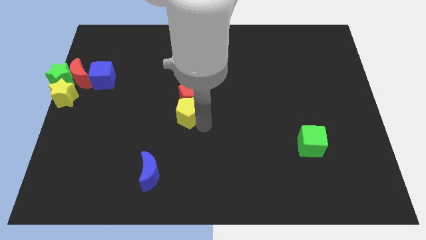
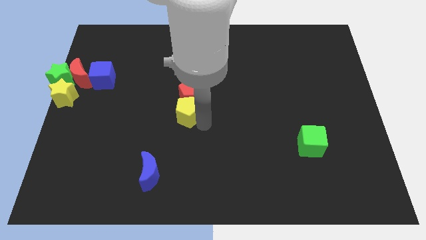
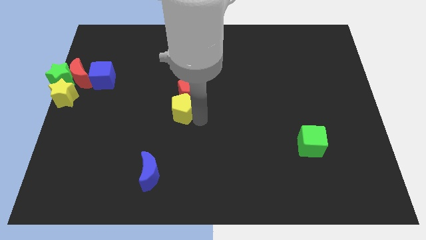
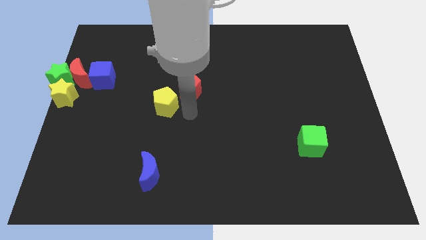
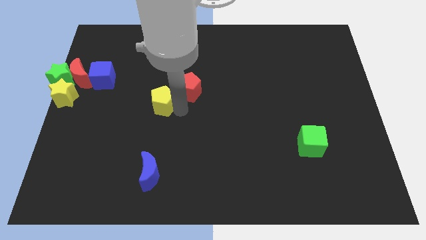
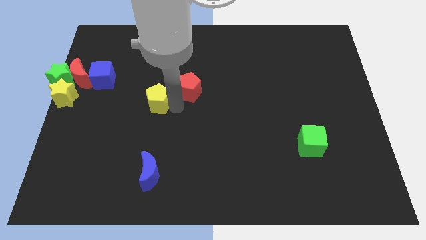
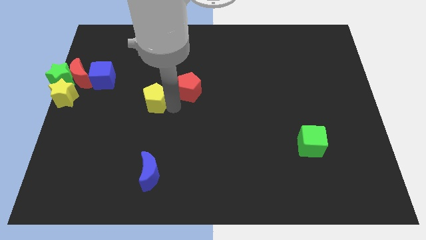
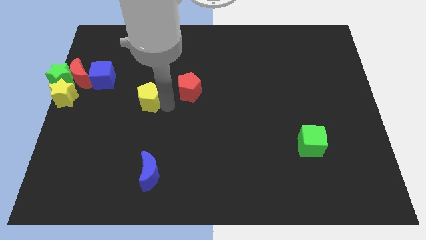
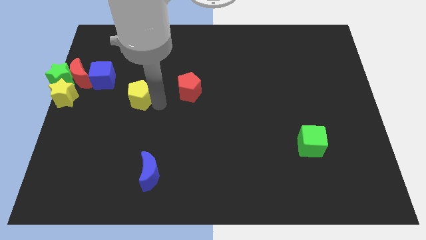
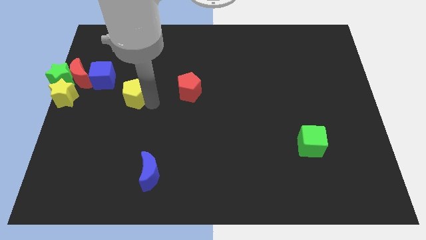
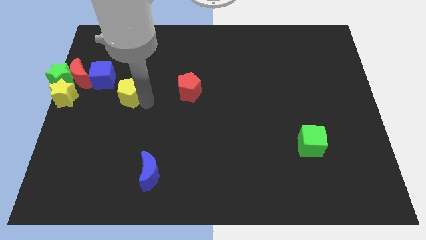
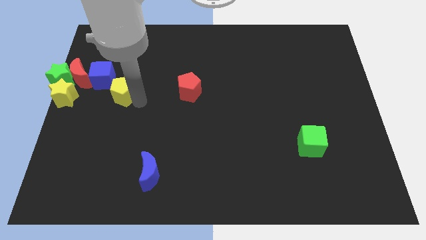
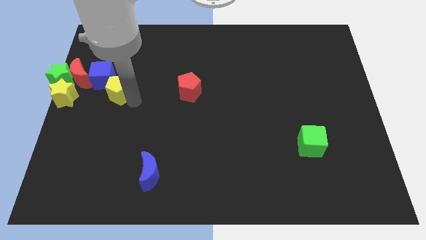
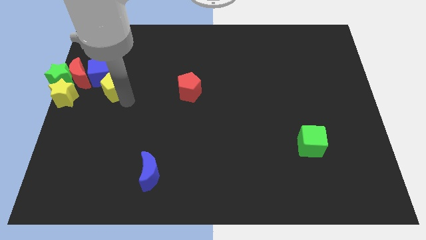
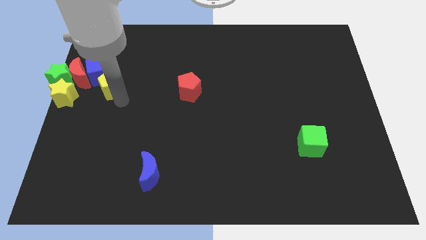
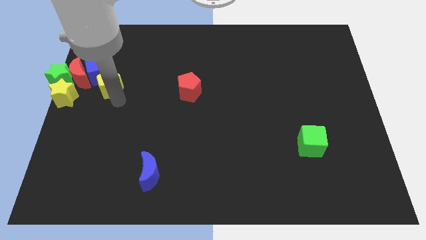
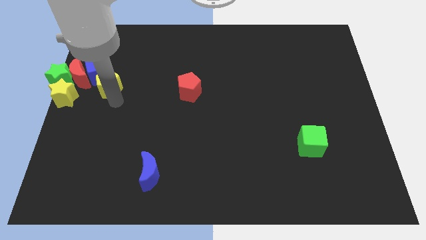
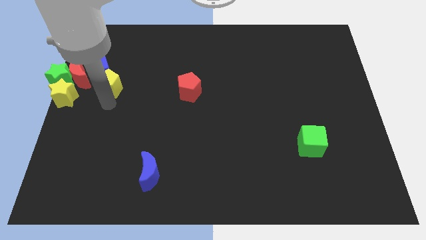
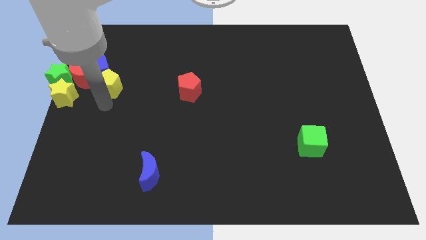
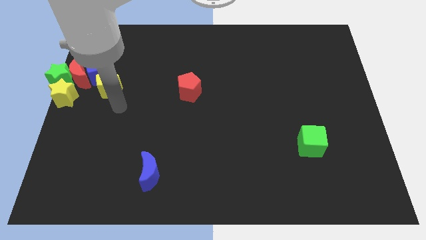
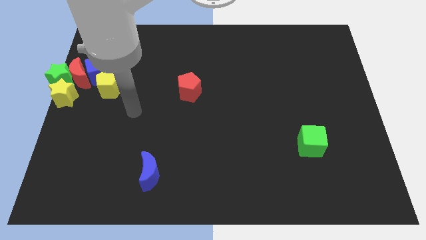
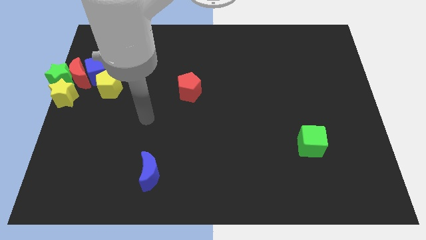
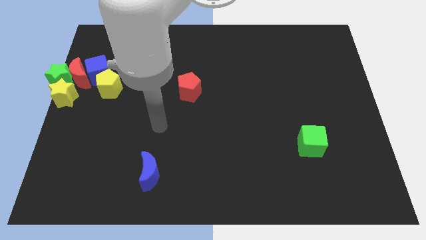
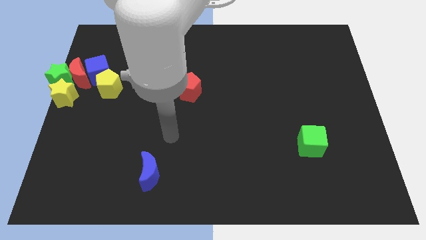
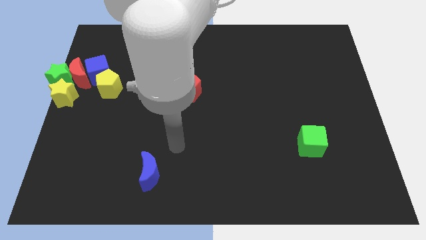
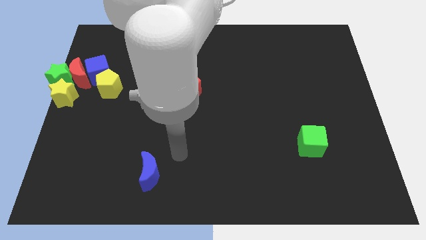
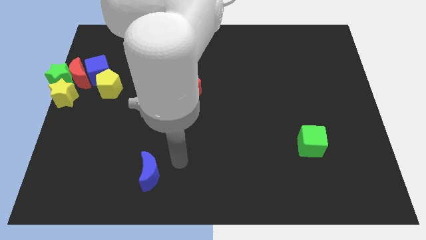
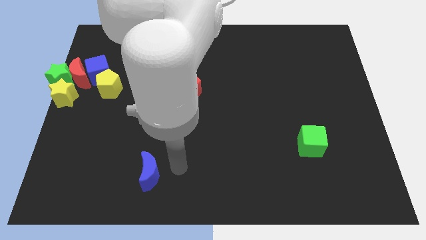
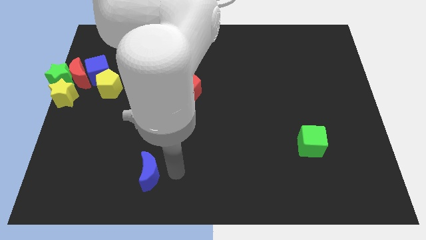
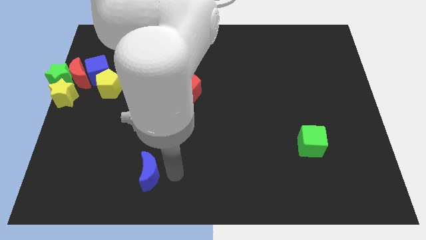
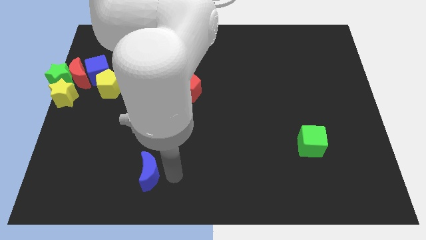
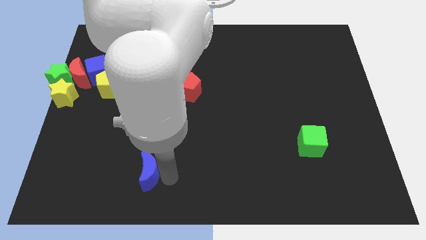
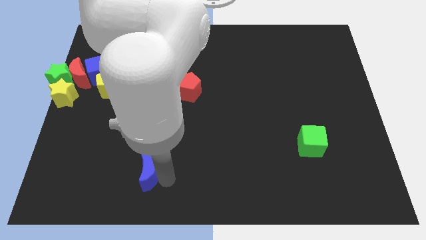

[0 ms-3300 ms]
push the yellow pentagon into the blue cube

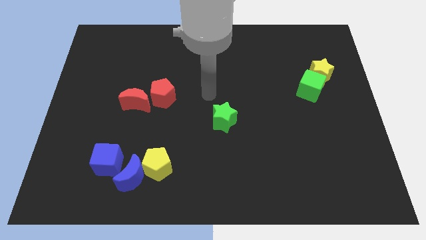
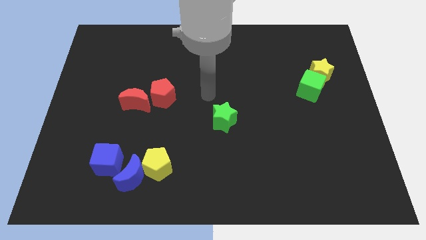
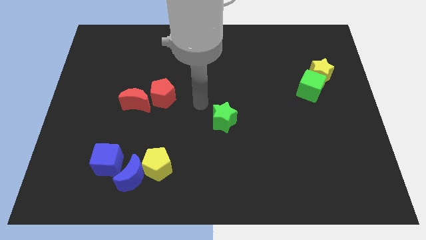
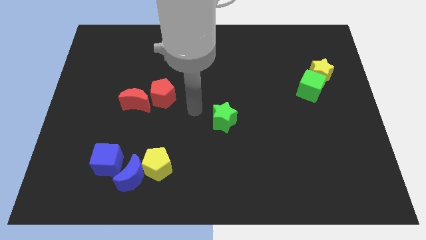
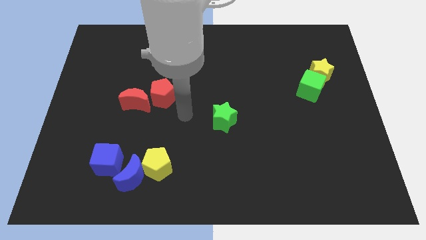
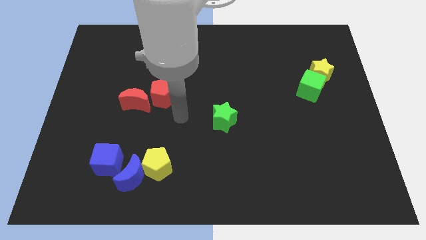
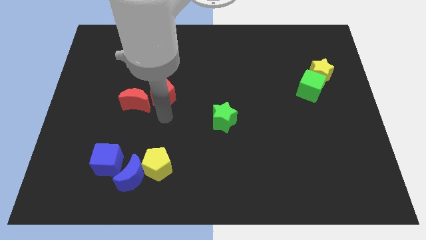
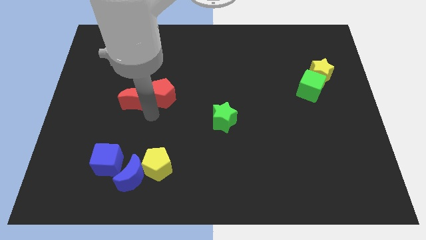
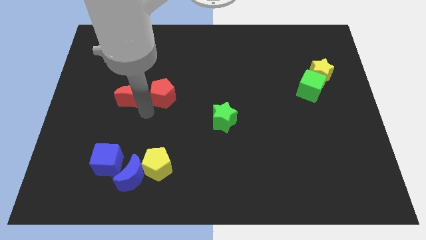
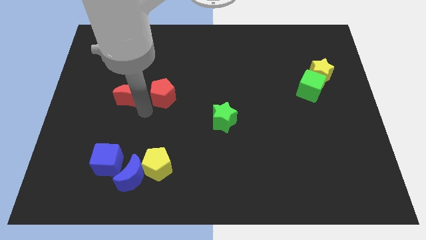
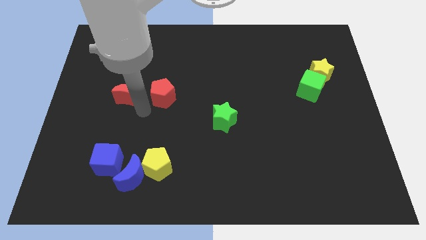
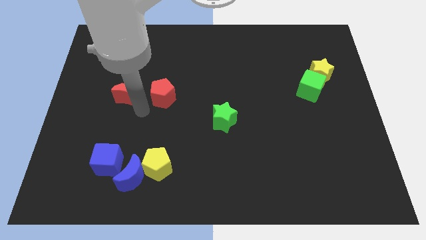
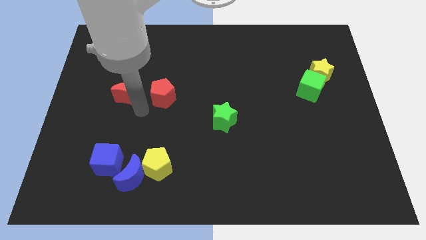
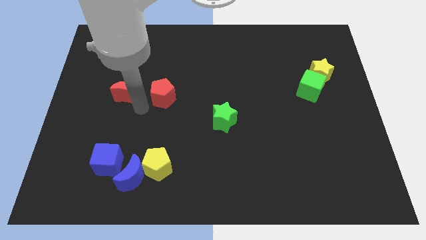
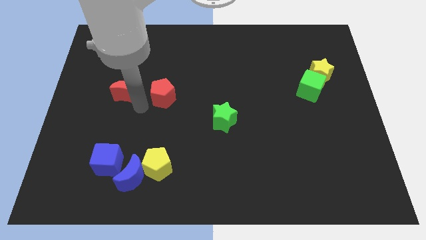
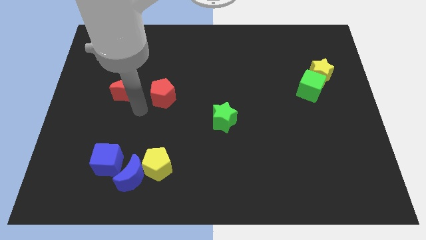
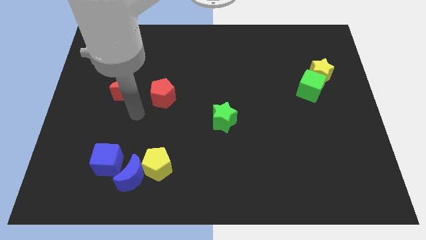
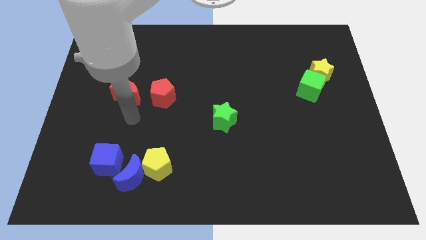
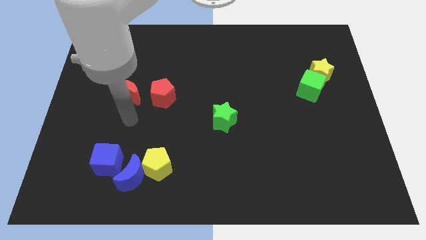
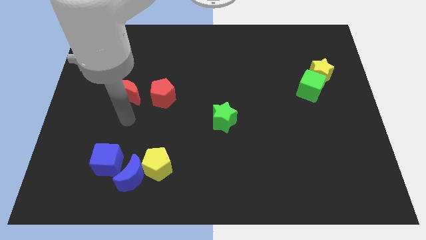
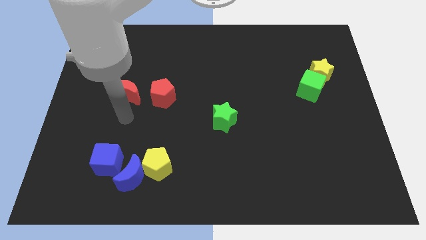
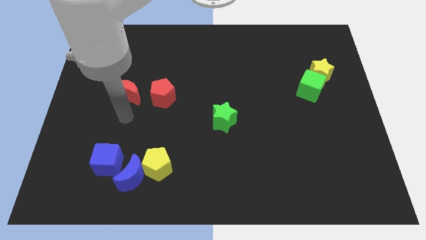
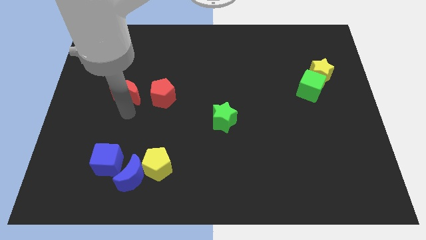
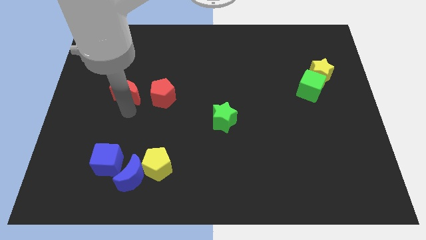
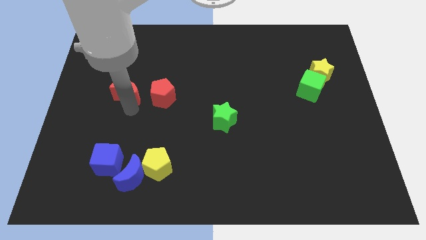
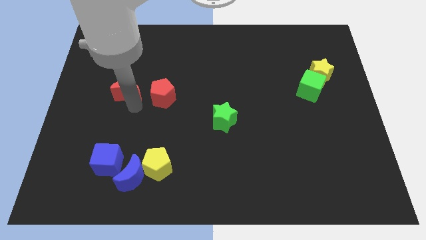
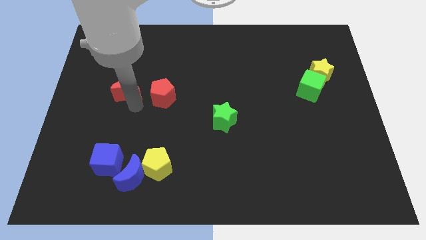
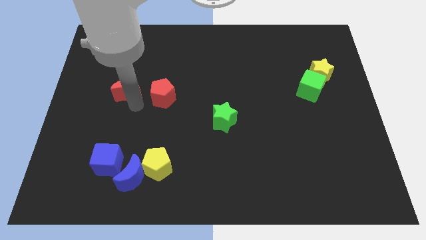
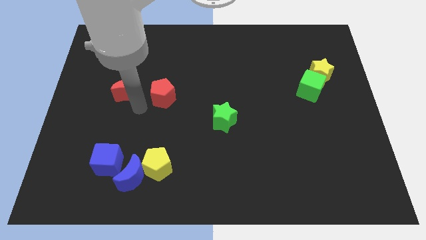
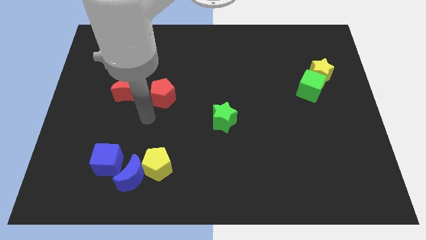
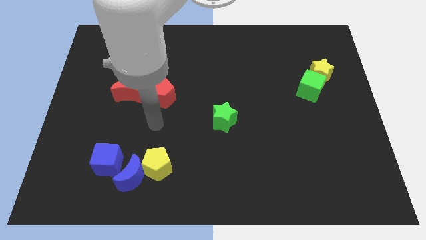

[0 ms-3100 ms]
slide red moon to the left of red pentagon

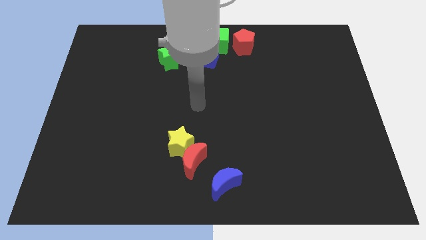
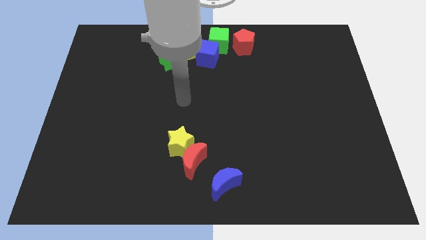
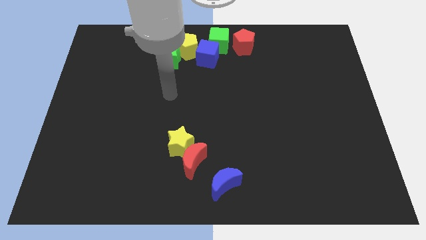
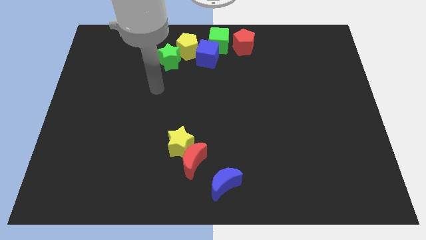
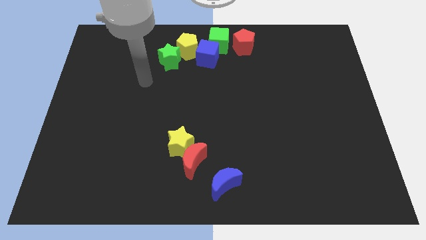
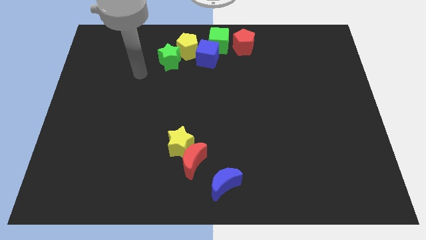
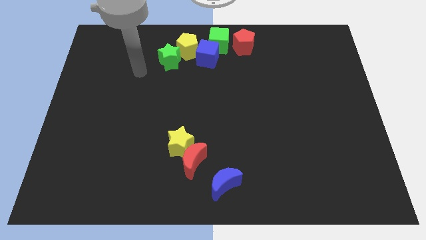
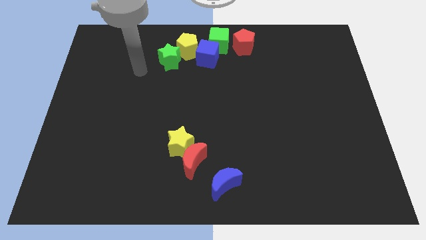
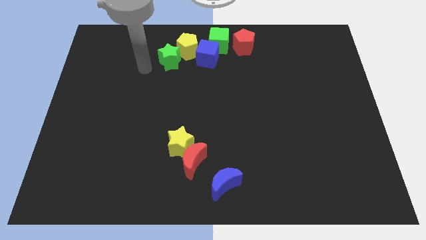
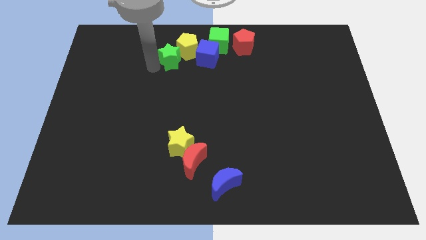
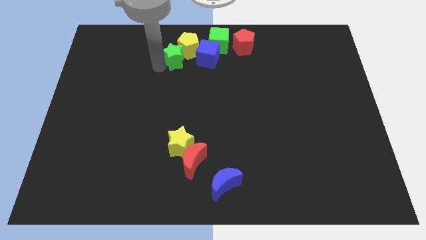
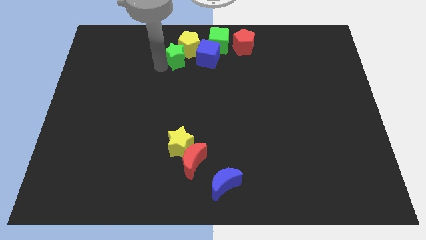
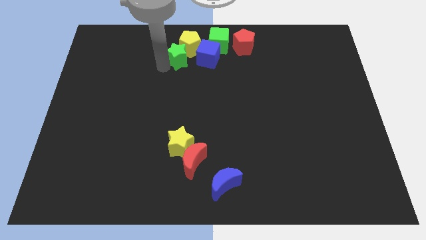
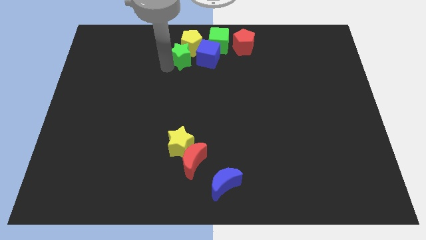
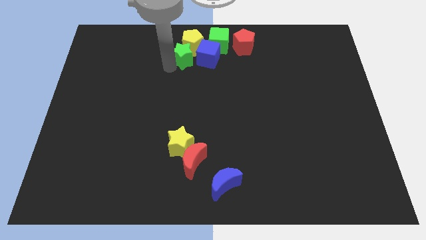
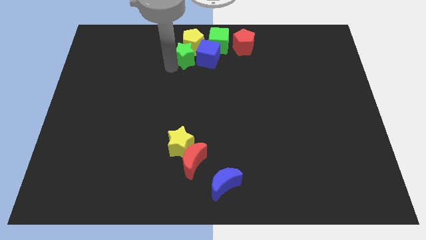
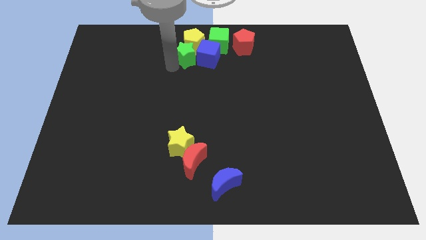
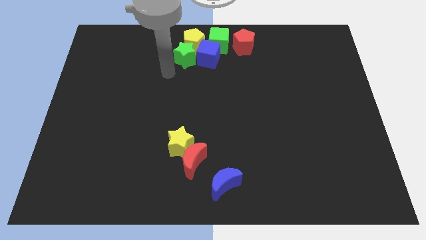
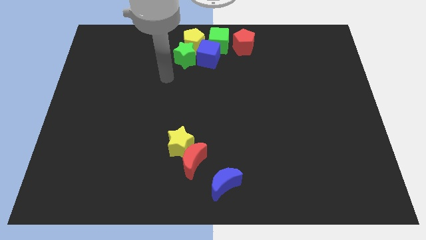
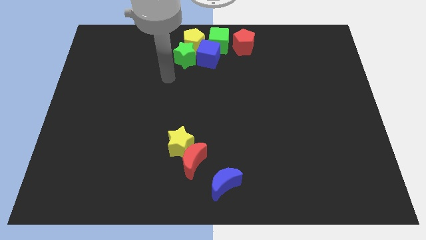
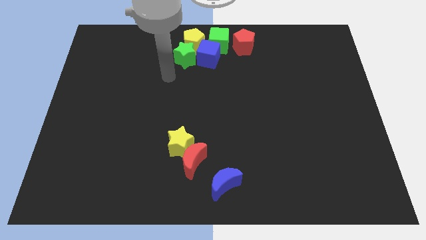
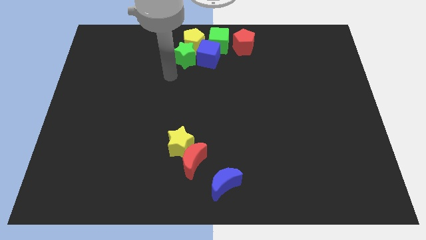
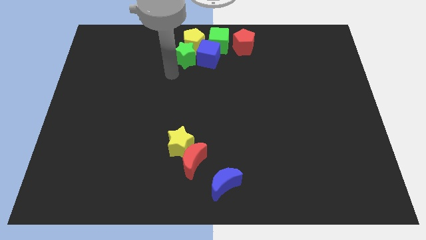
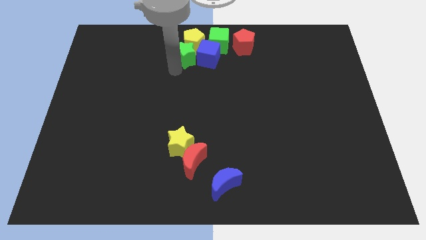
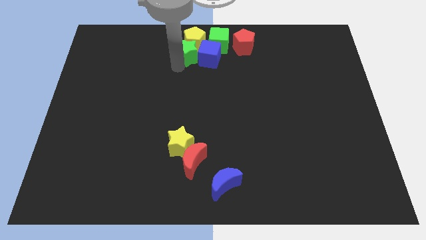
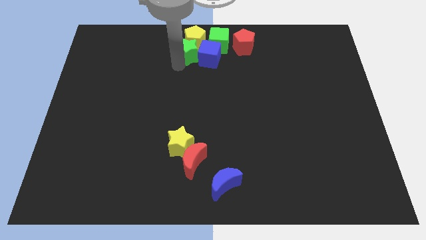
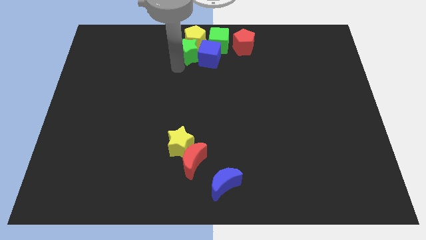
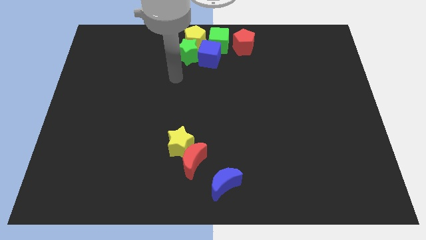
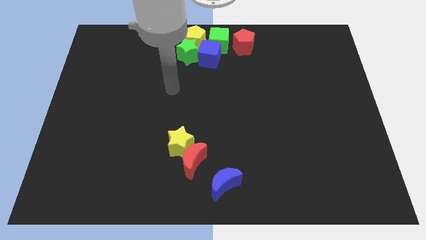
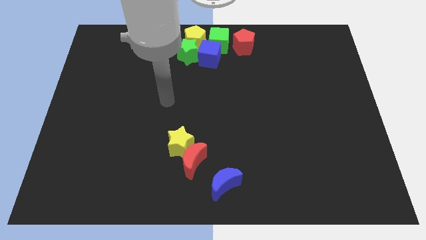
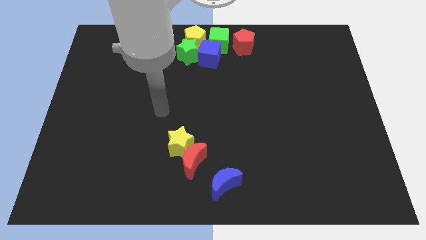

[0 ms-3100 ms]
slightly push the green star into the yellow pentagon
